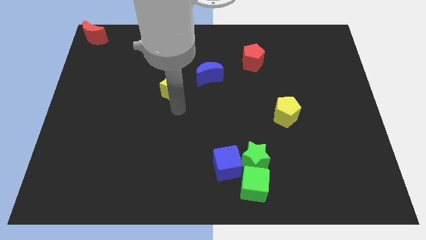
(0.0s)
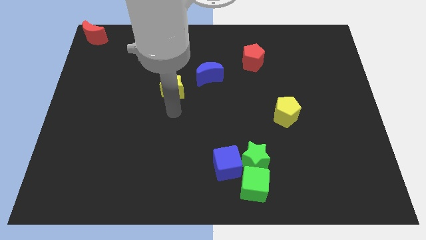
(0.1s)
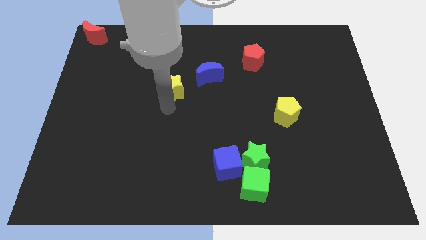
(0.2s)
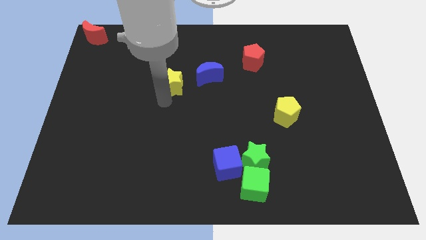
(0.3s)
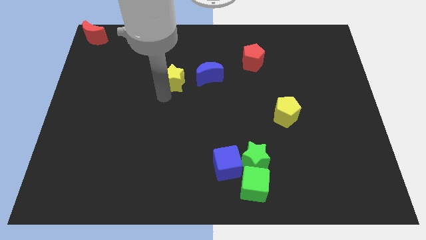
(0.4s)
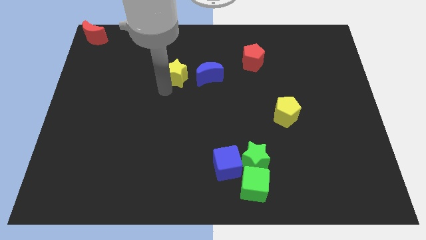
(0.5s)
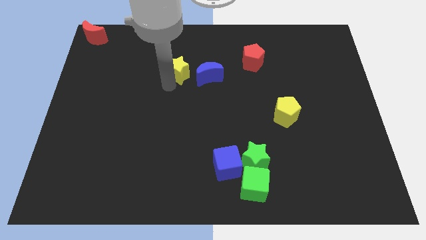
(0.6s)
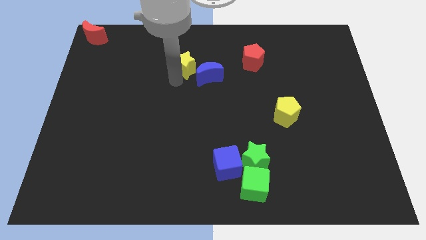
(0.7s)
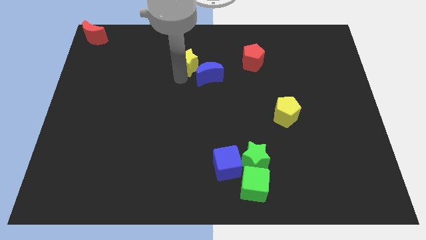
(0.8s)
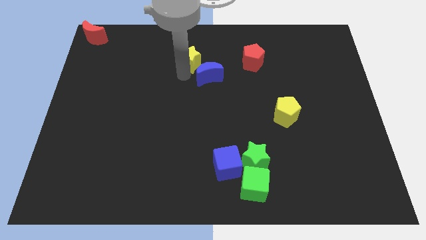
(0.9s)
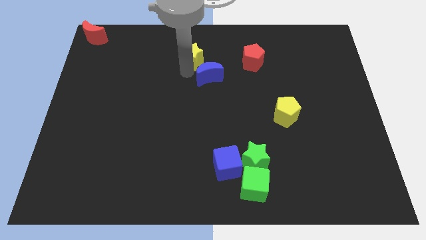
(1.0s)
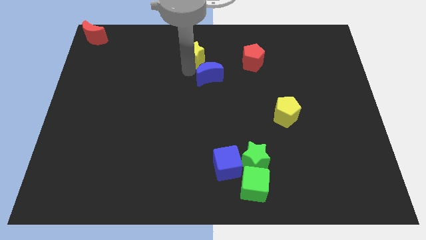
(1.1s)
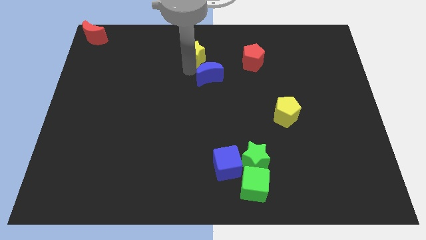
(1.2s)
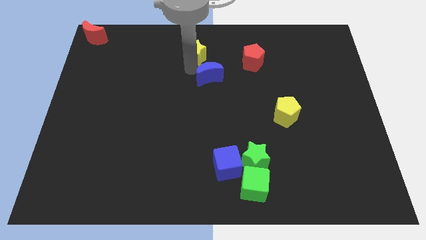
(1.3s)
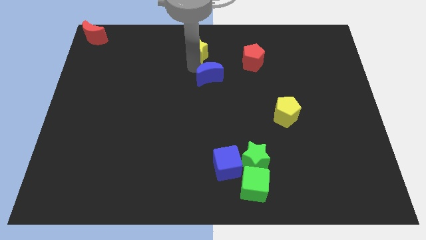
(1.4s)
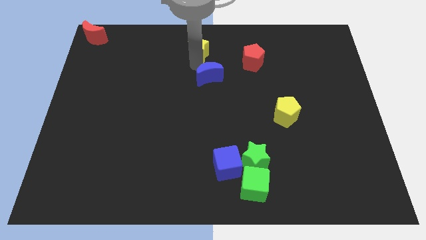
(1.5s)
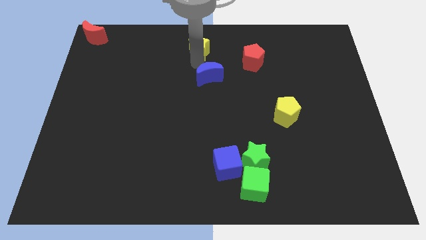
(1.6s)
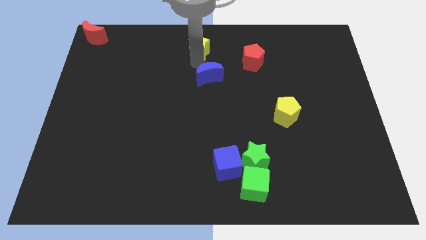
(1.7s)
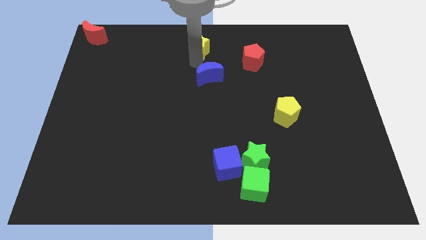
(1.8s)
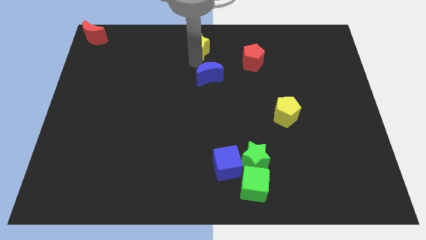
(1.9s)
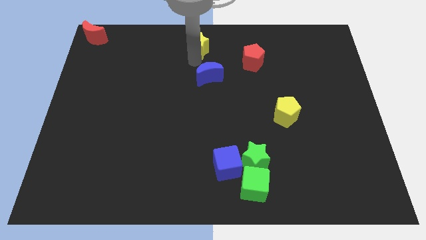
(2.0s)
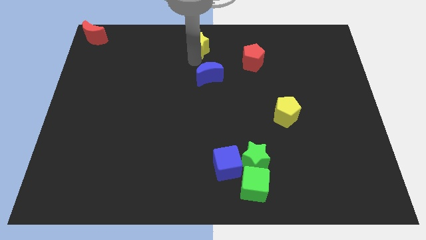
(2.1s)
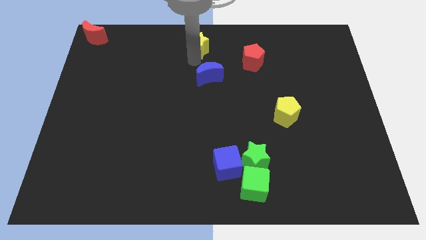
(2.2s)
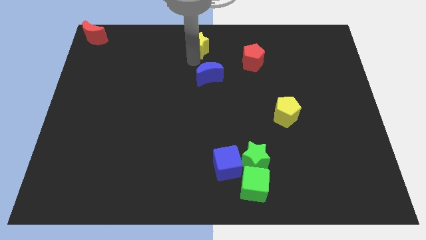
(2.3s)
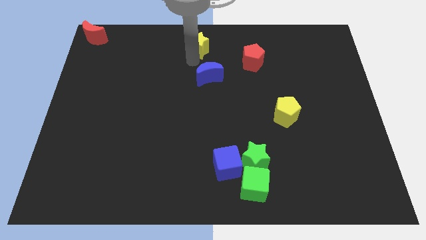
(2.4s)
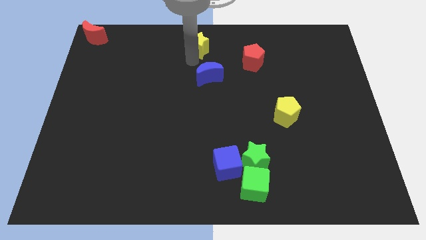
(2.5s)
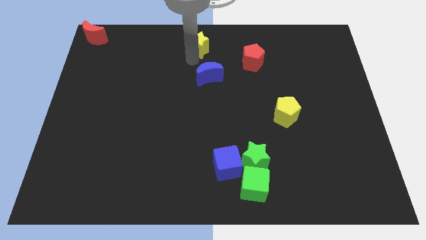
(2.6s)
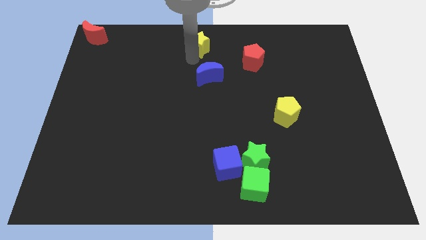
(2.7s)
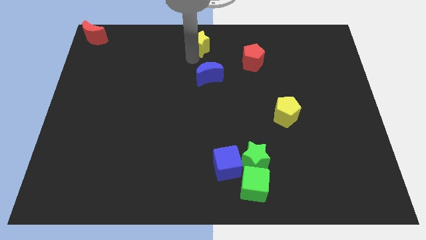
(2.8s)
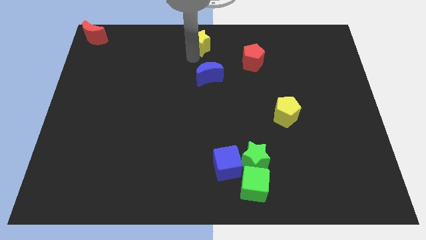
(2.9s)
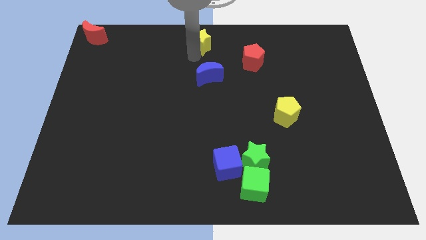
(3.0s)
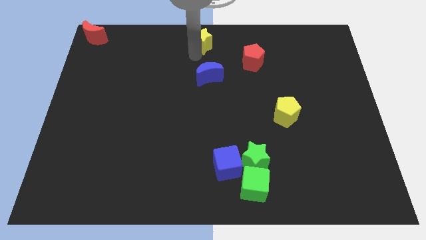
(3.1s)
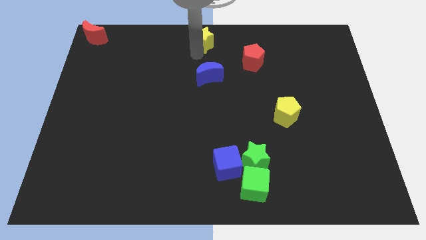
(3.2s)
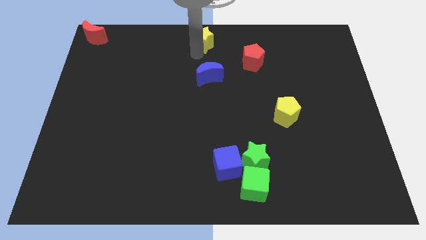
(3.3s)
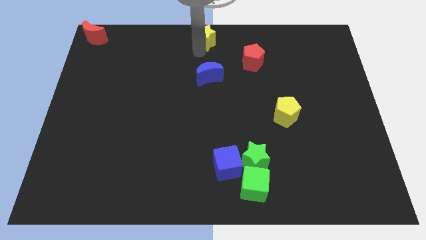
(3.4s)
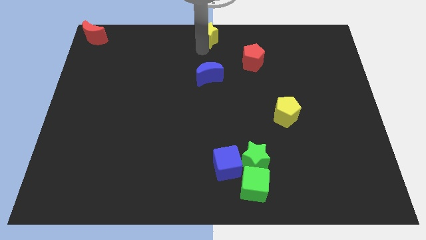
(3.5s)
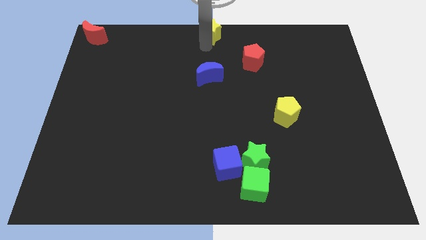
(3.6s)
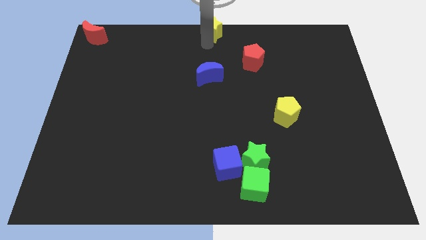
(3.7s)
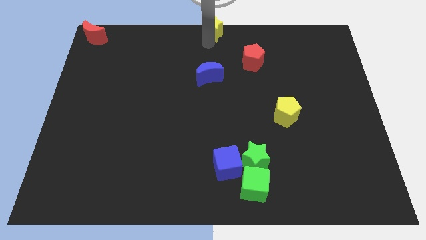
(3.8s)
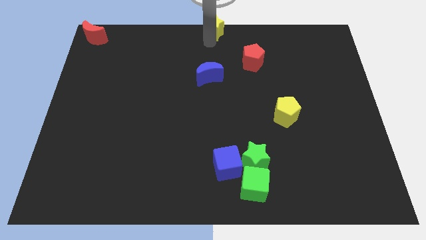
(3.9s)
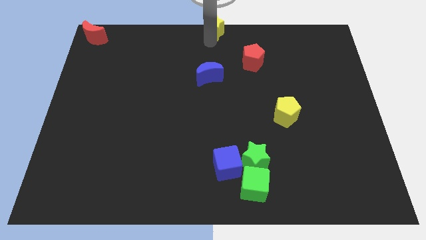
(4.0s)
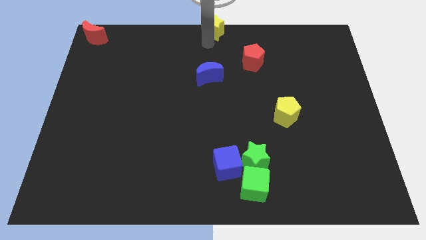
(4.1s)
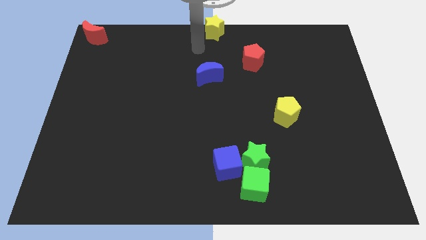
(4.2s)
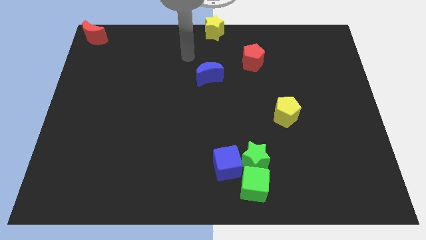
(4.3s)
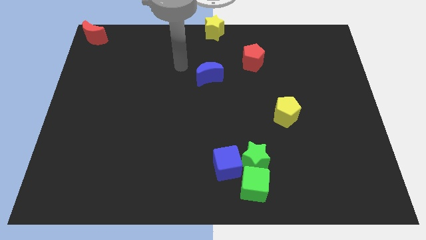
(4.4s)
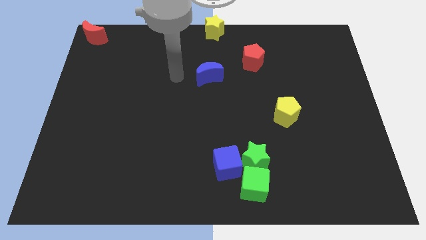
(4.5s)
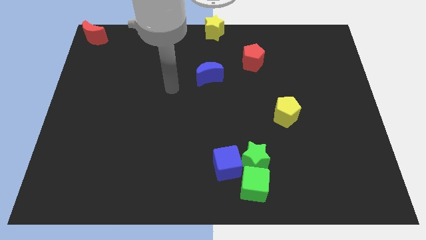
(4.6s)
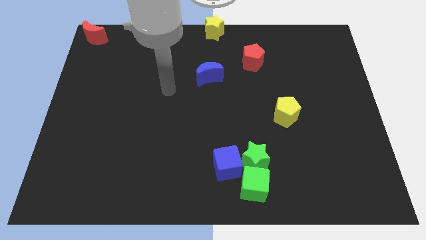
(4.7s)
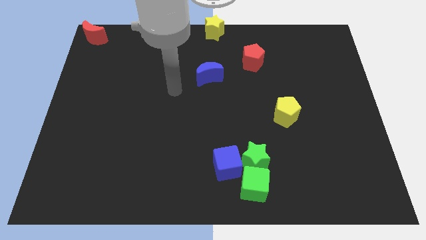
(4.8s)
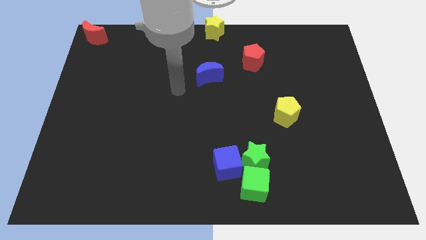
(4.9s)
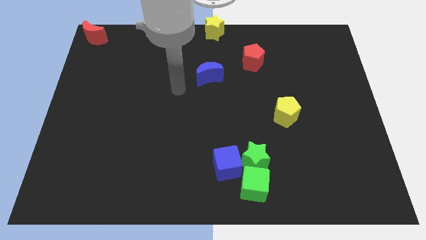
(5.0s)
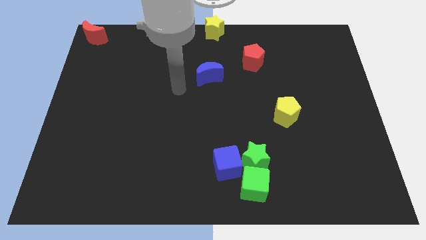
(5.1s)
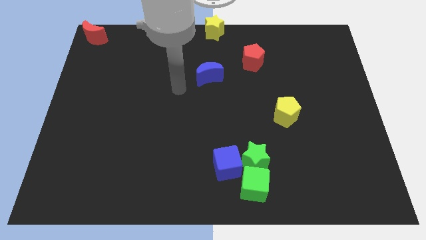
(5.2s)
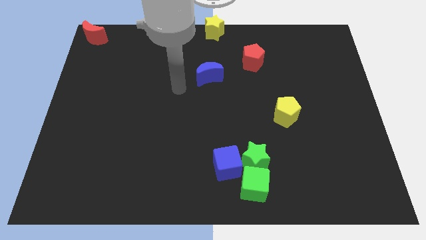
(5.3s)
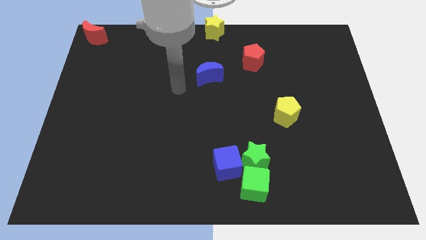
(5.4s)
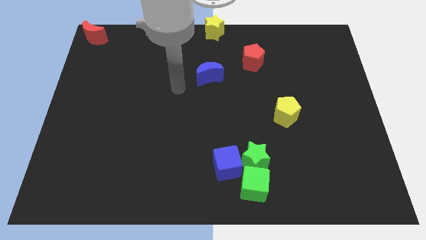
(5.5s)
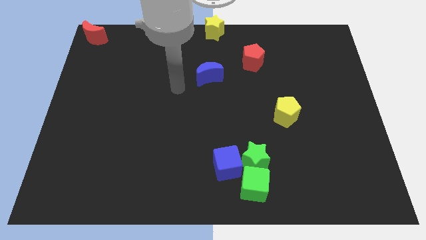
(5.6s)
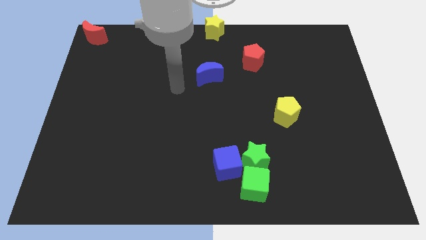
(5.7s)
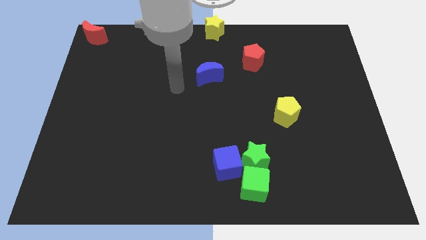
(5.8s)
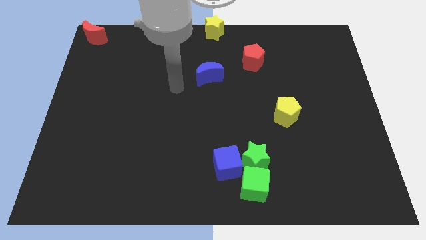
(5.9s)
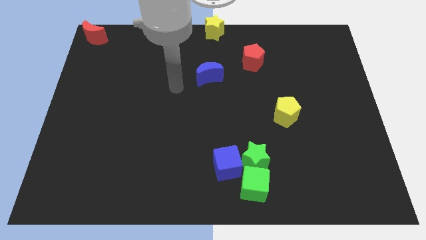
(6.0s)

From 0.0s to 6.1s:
move the yellow star to the top center

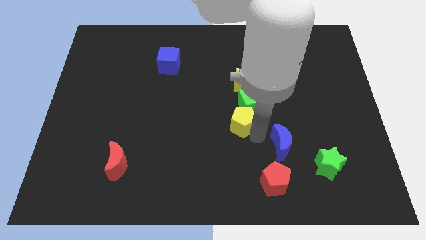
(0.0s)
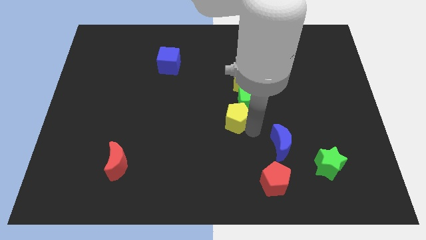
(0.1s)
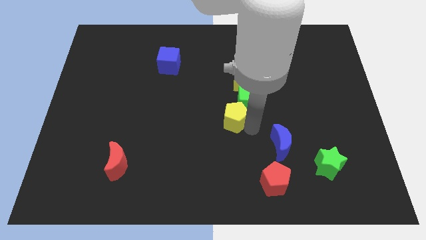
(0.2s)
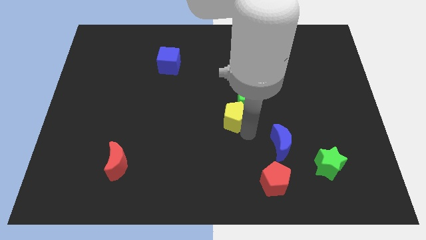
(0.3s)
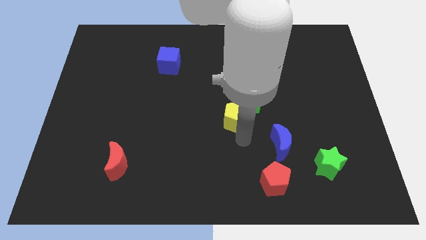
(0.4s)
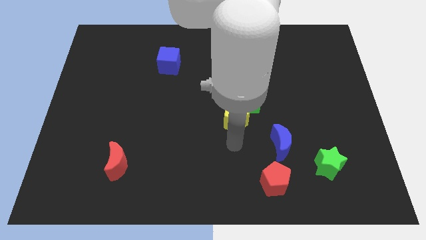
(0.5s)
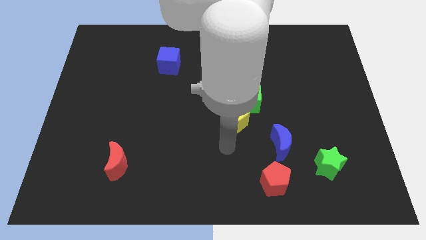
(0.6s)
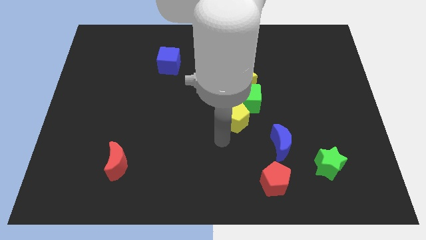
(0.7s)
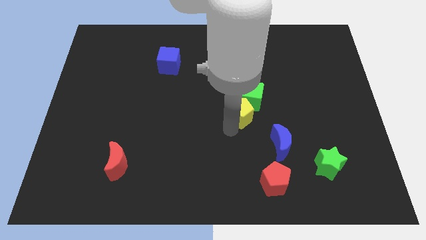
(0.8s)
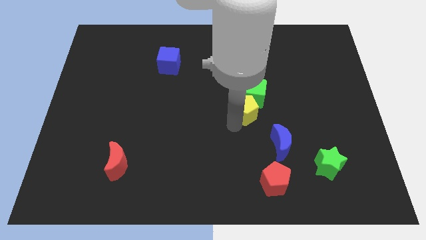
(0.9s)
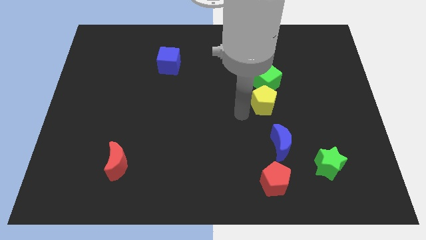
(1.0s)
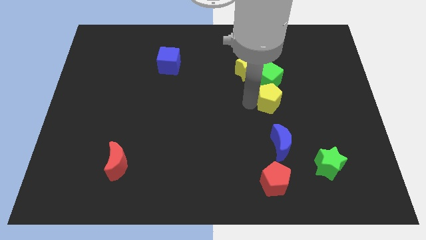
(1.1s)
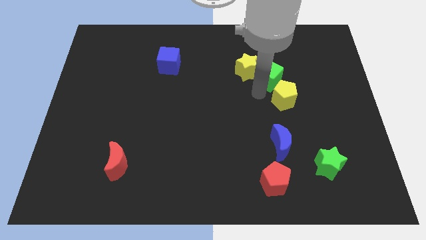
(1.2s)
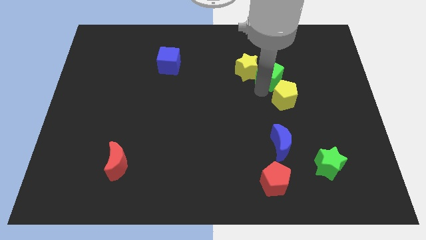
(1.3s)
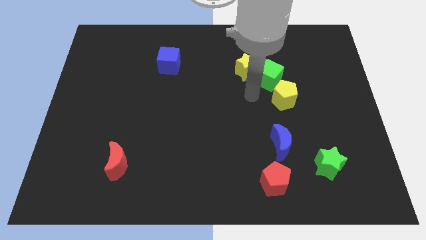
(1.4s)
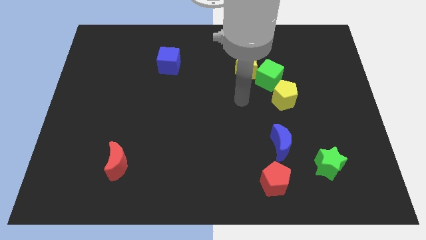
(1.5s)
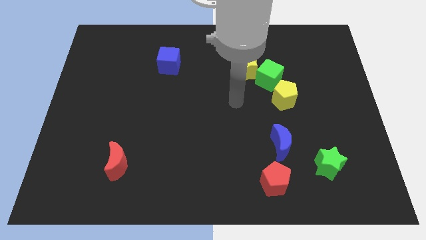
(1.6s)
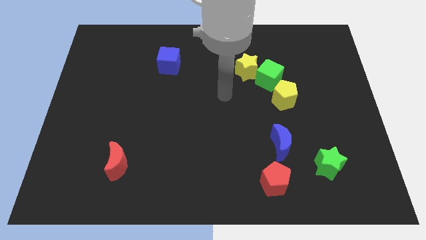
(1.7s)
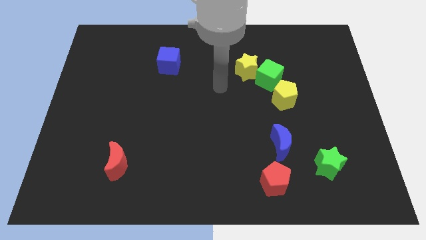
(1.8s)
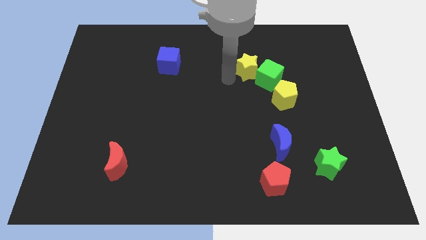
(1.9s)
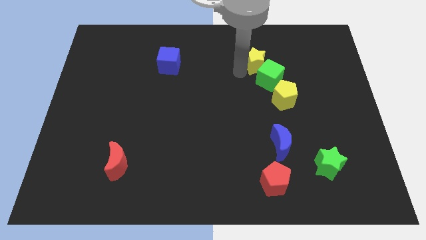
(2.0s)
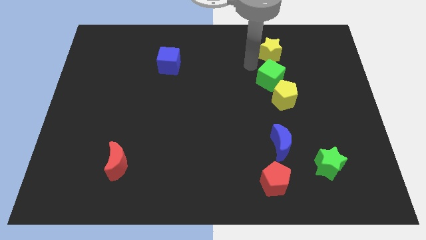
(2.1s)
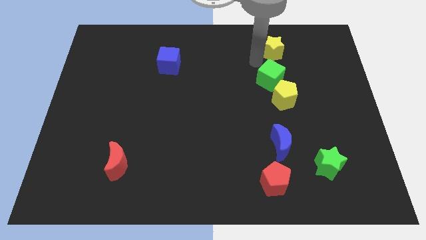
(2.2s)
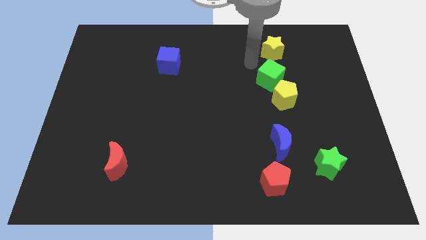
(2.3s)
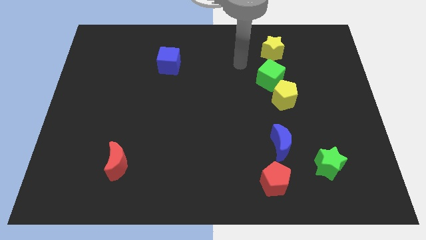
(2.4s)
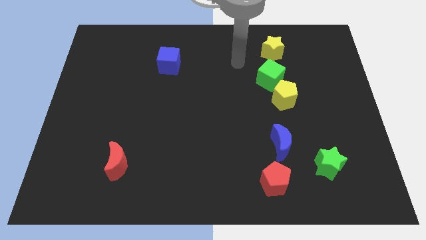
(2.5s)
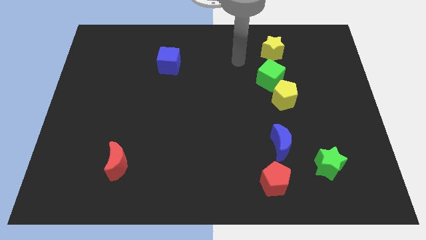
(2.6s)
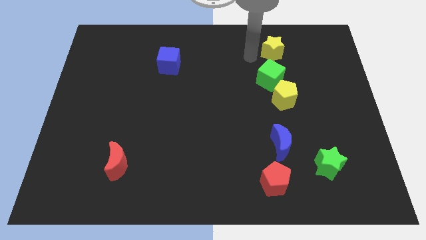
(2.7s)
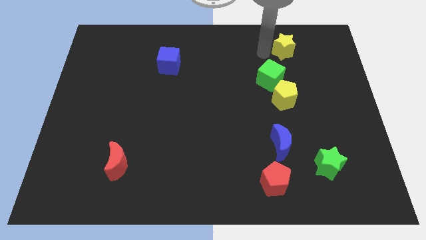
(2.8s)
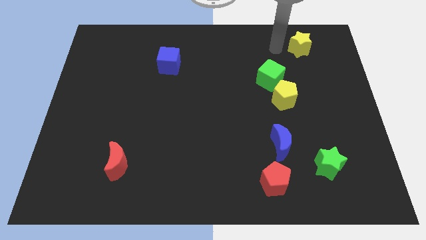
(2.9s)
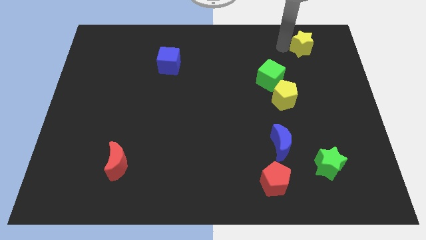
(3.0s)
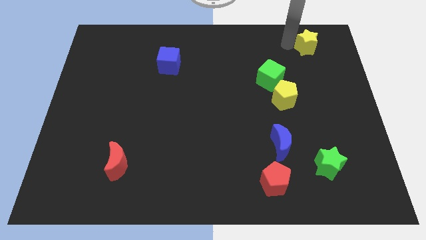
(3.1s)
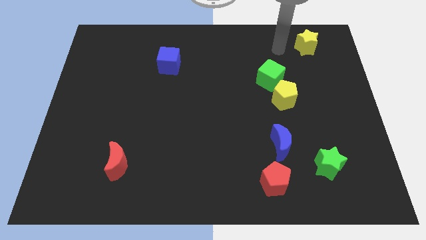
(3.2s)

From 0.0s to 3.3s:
place yellow star below green star
